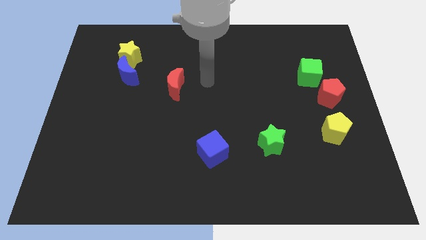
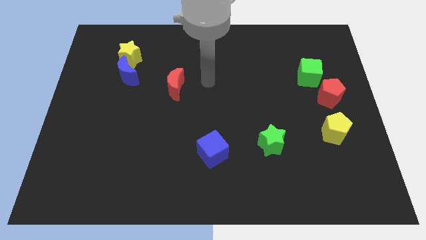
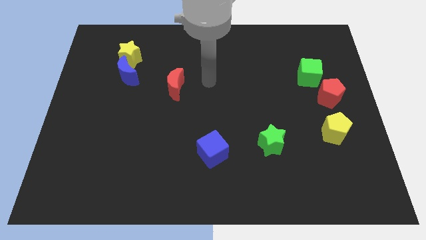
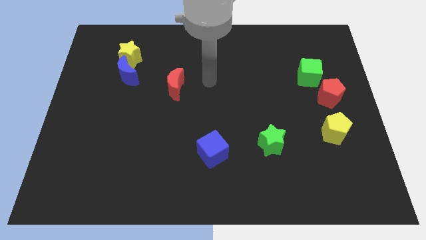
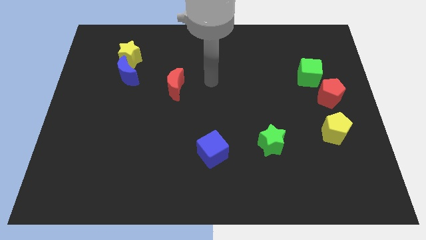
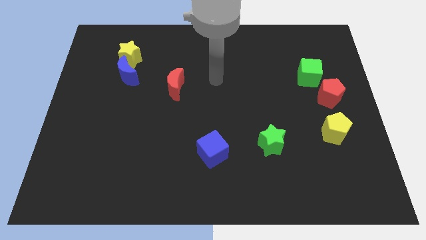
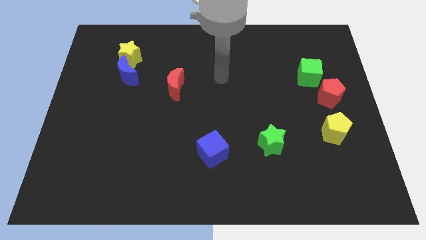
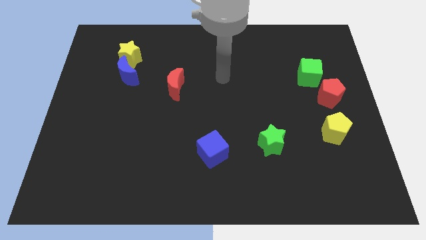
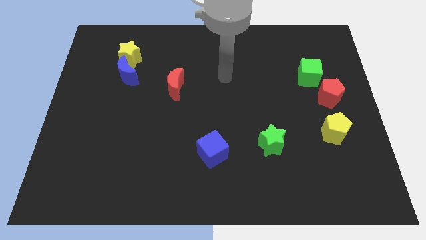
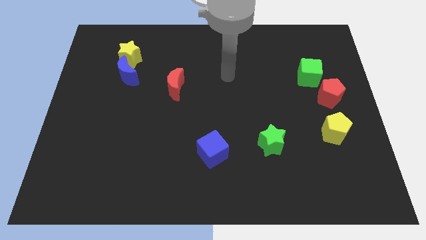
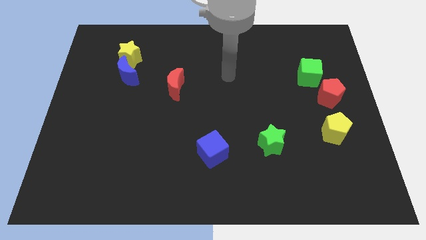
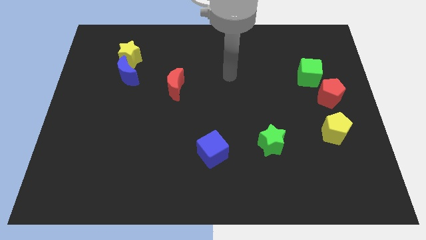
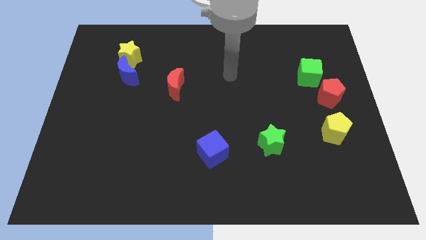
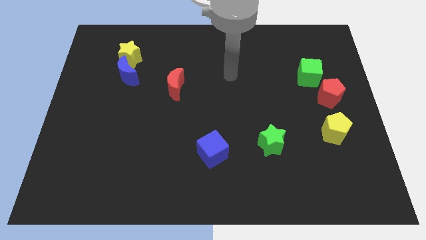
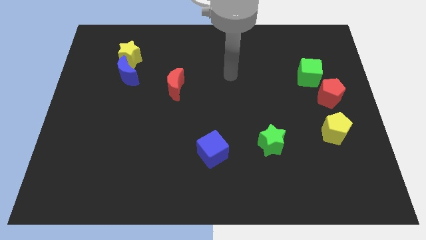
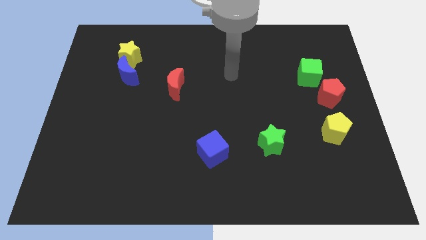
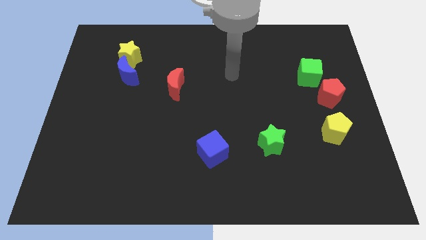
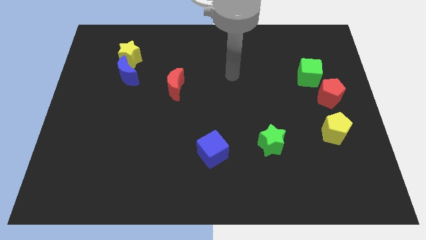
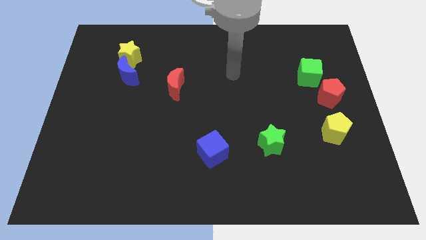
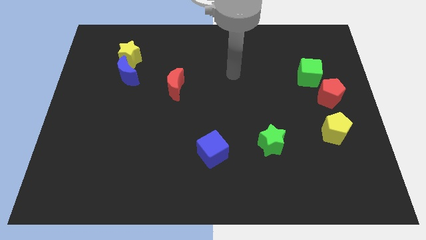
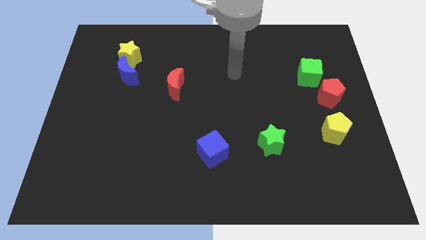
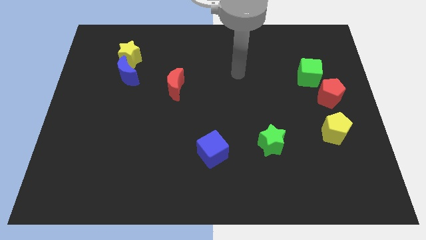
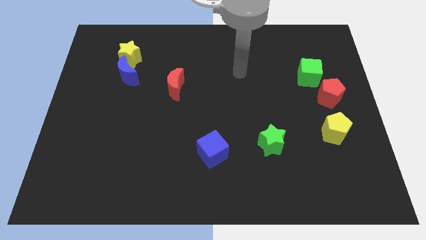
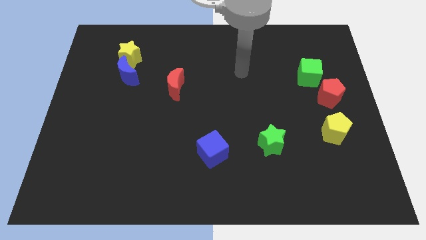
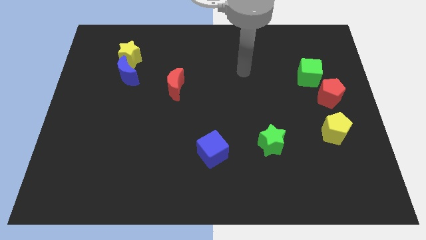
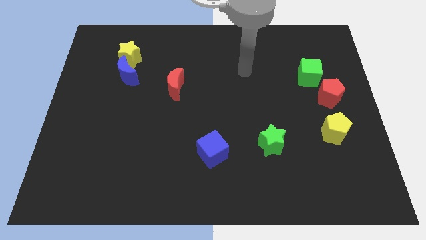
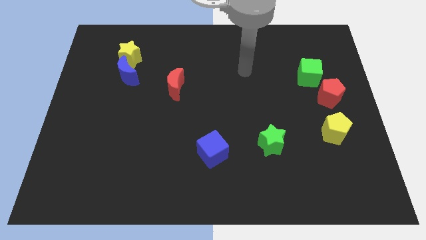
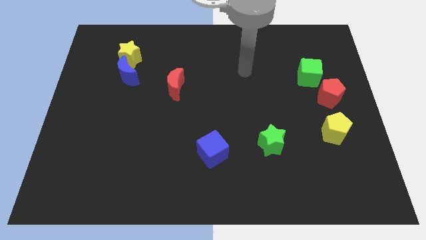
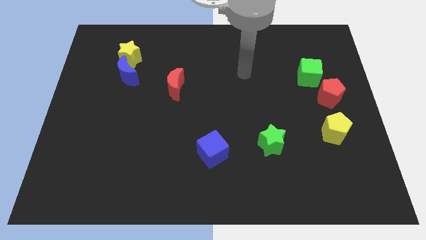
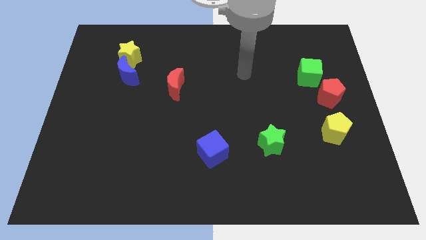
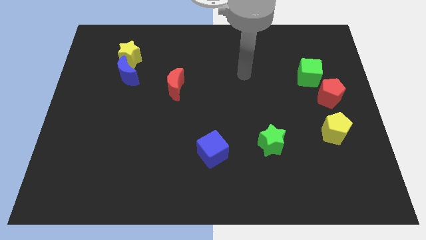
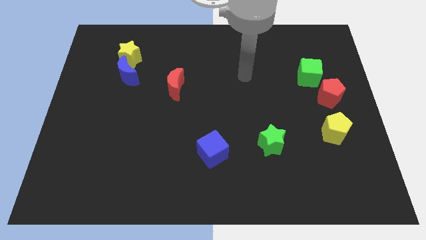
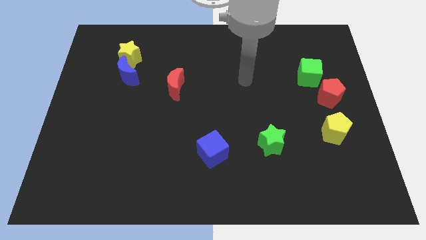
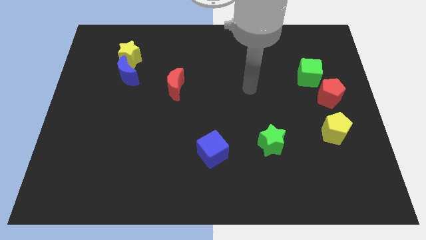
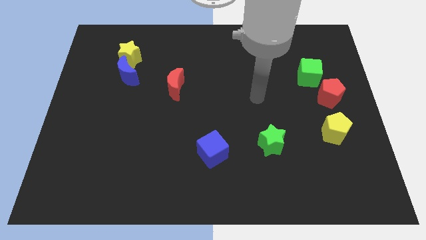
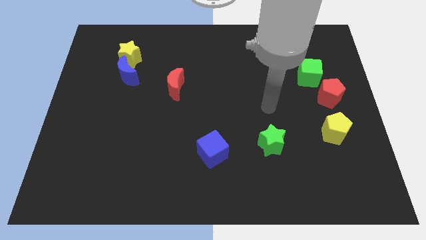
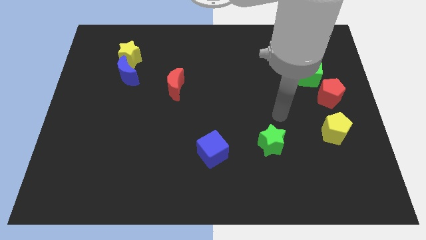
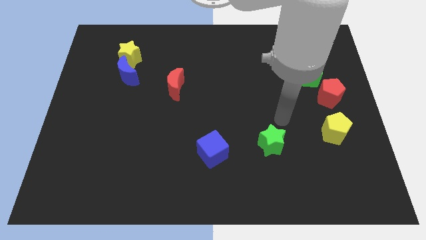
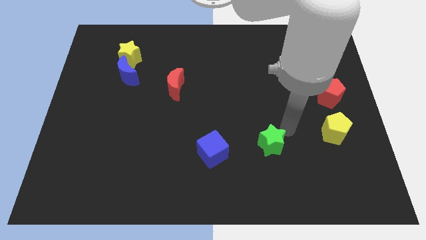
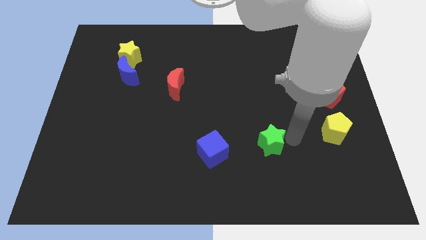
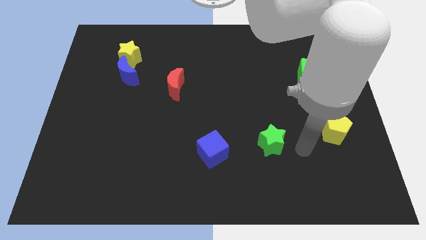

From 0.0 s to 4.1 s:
place your arm right to the green star

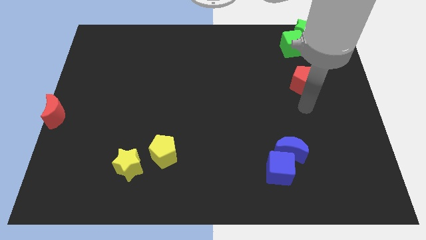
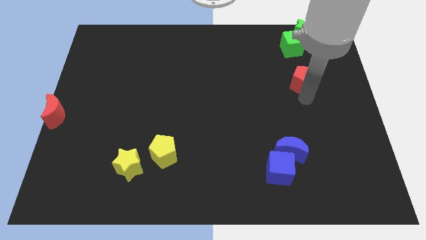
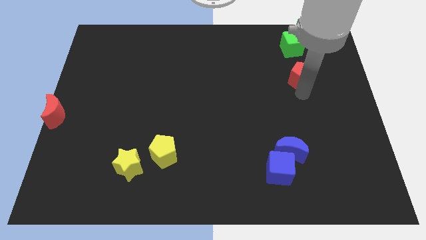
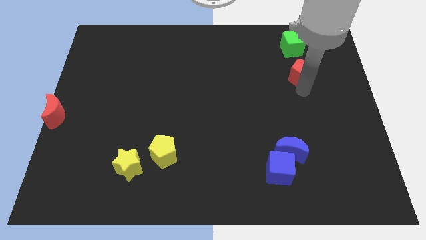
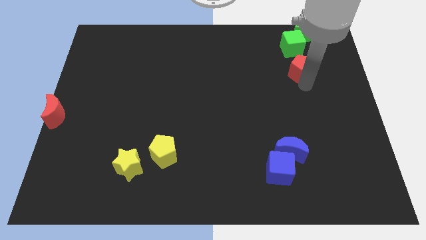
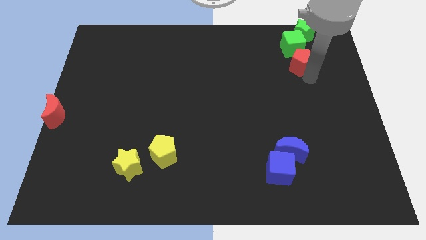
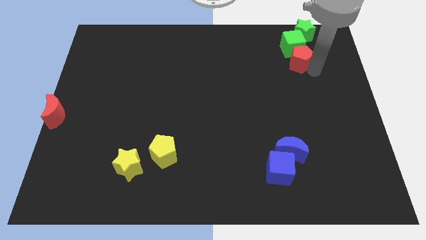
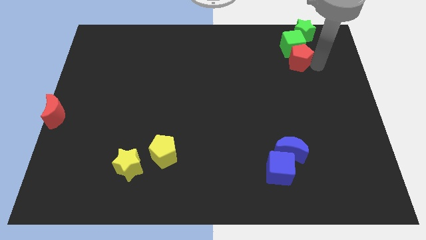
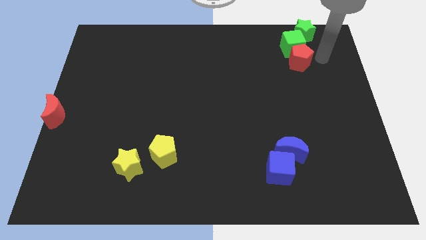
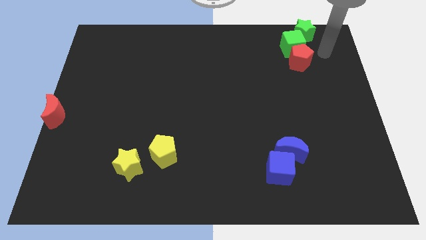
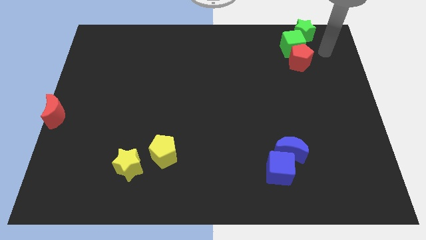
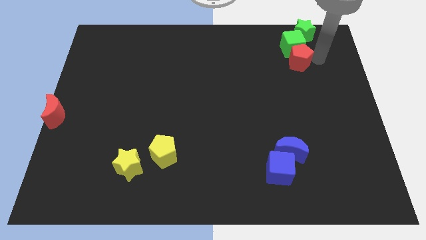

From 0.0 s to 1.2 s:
push red pentagon below the green cuube

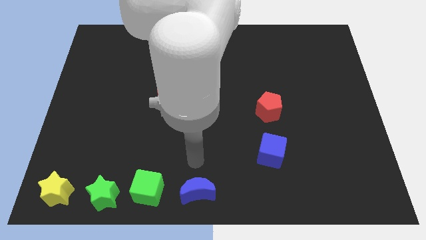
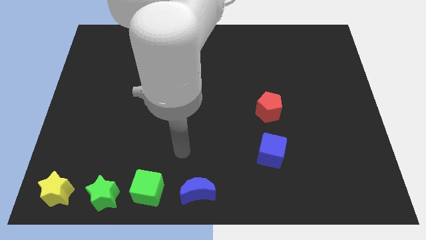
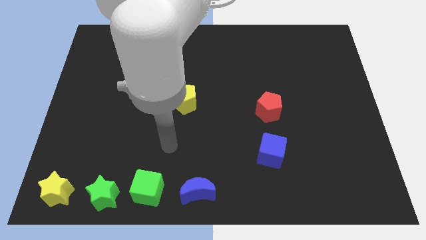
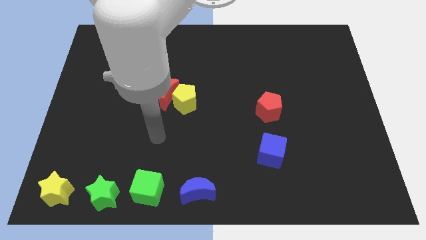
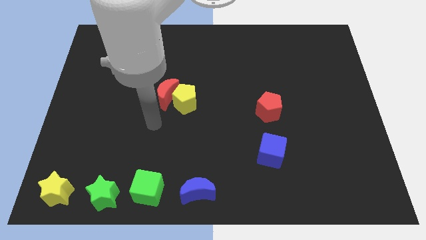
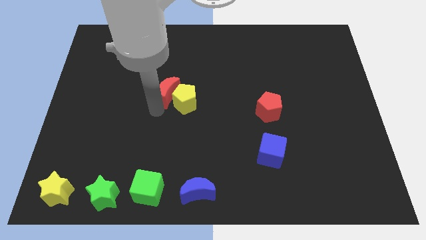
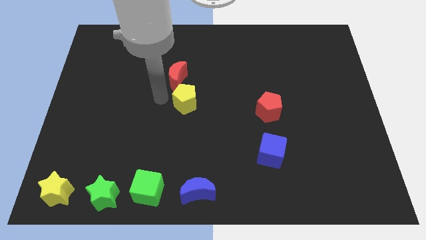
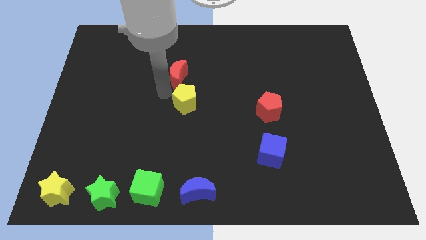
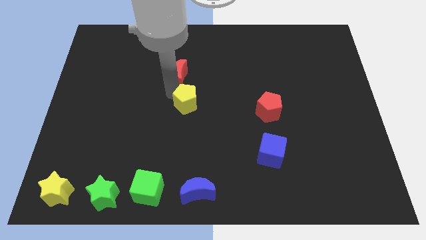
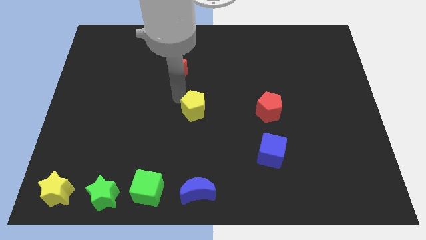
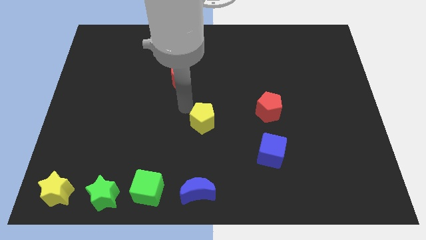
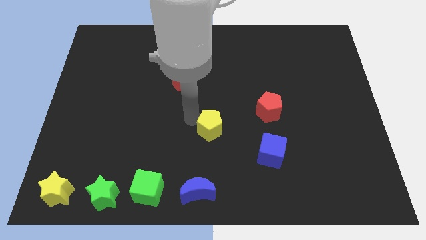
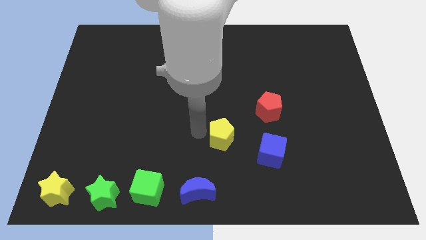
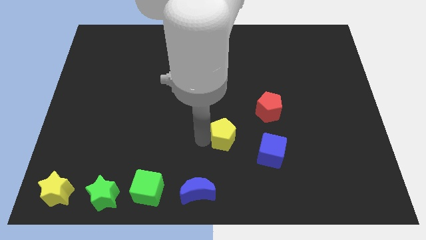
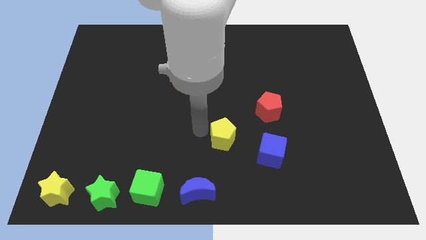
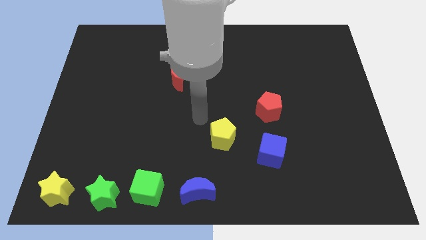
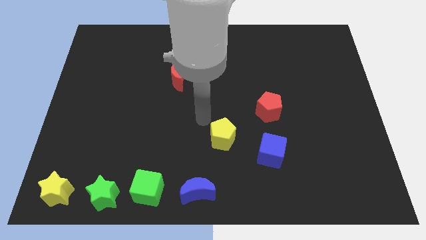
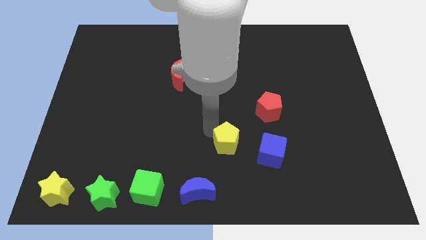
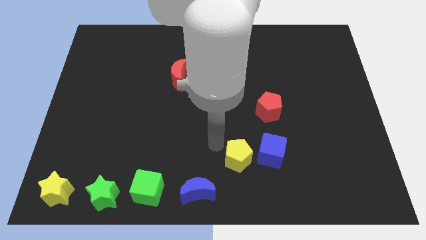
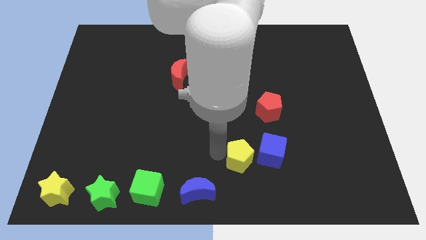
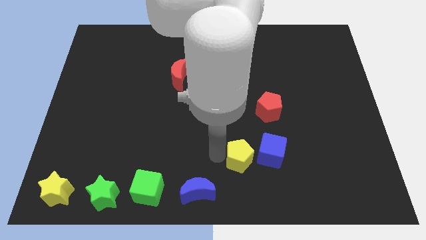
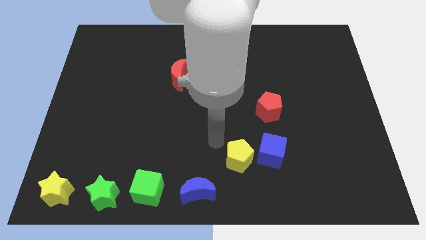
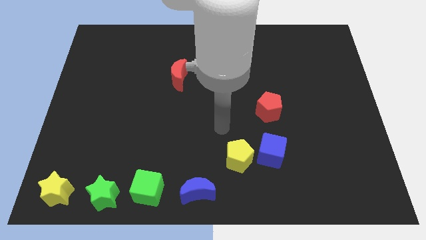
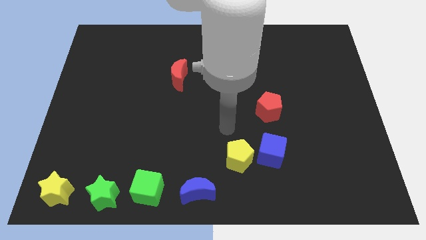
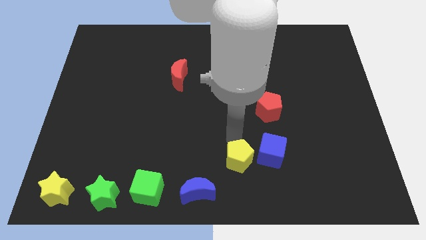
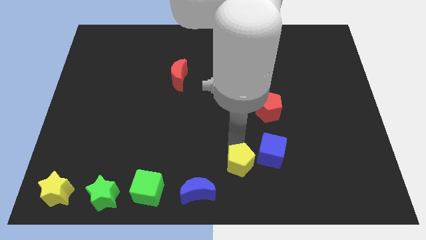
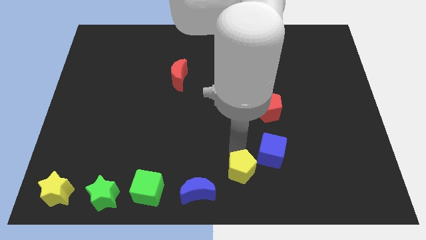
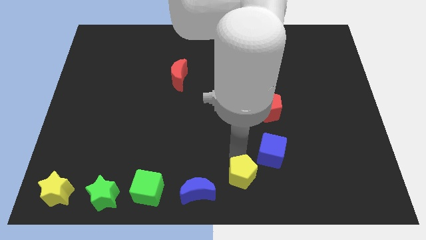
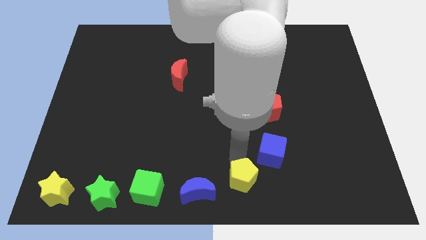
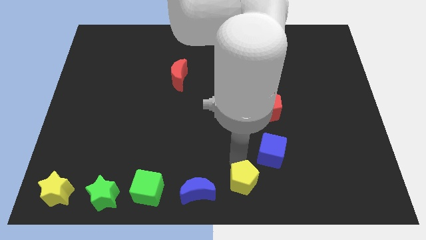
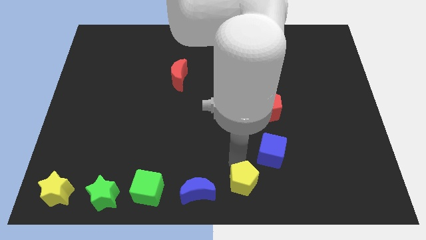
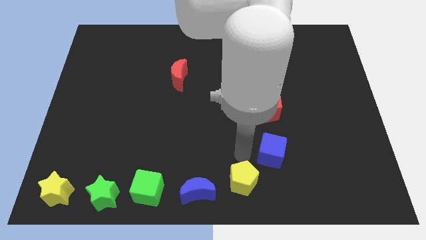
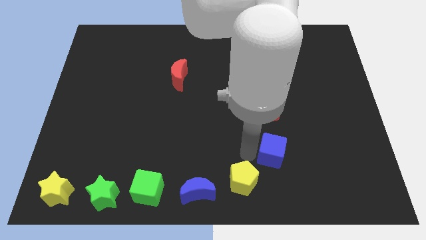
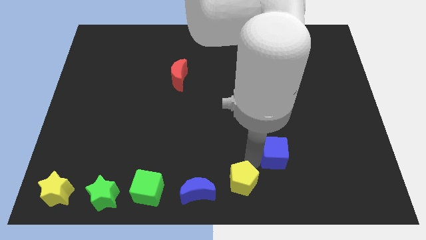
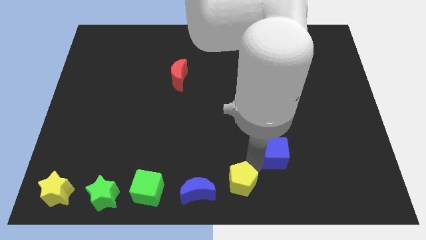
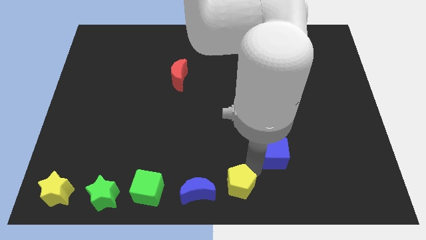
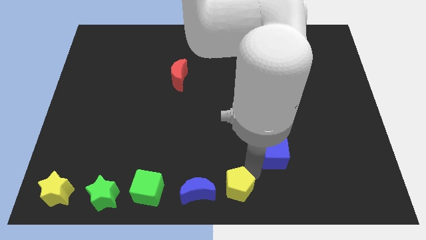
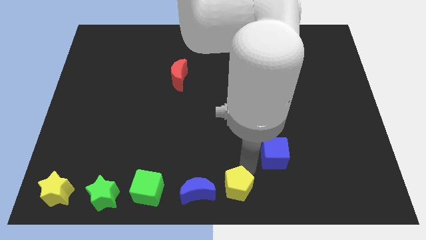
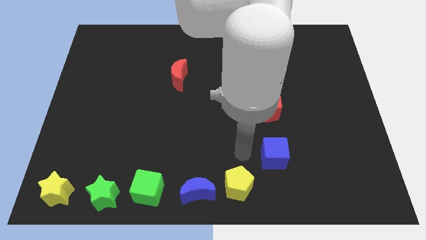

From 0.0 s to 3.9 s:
push yellow pentagon to bottom center
